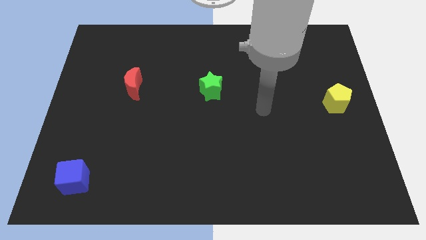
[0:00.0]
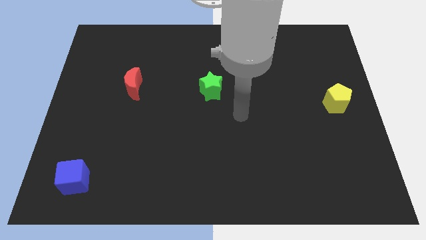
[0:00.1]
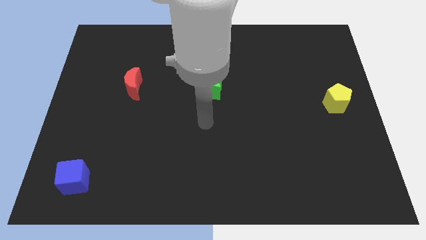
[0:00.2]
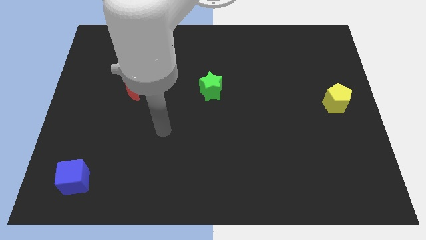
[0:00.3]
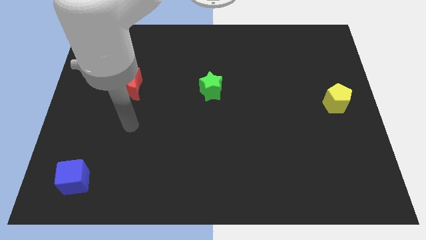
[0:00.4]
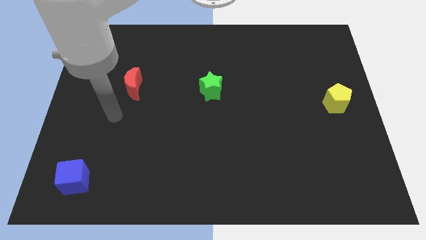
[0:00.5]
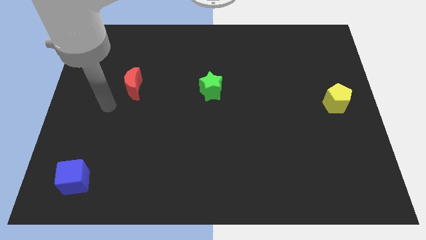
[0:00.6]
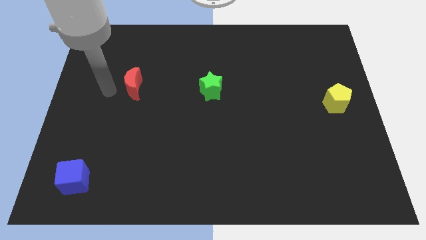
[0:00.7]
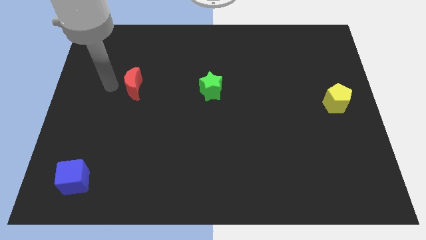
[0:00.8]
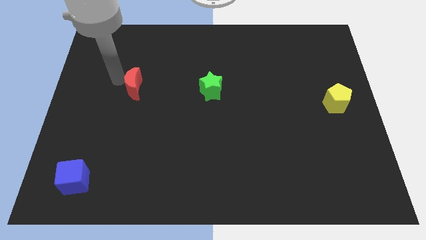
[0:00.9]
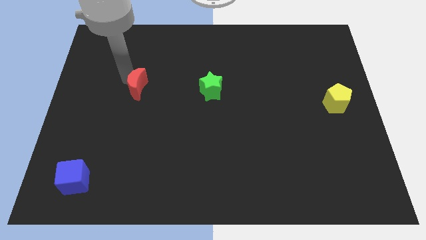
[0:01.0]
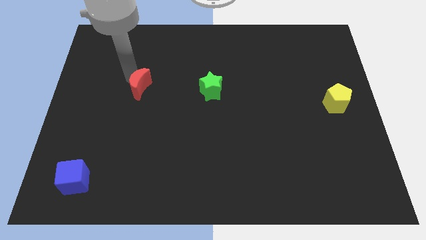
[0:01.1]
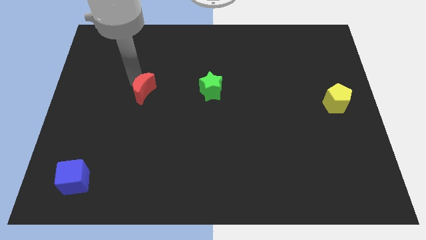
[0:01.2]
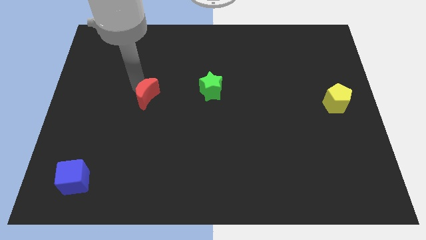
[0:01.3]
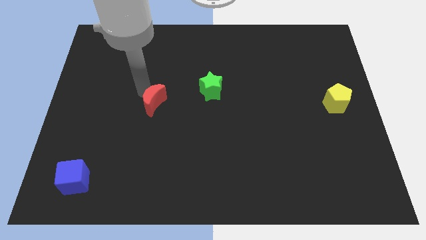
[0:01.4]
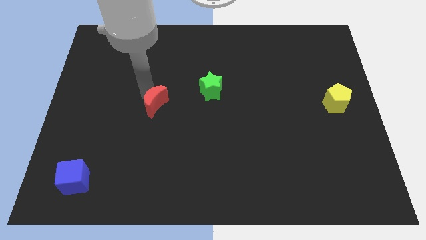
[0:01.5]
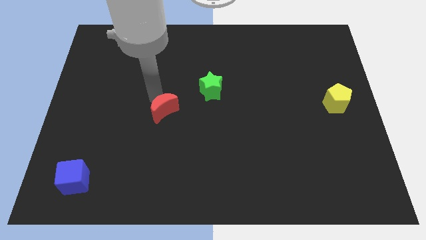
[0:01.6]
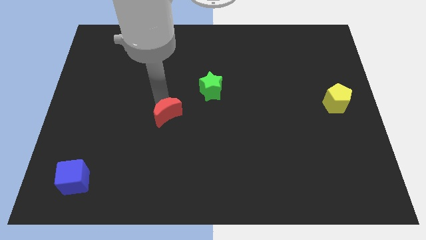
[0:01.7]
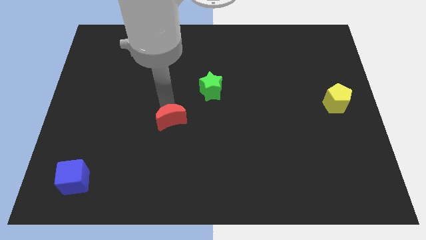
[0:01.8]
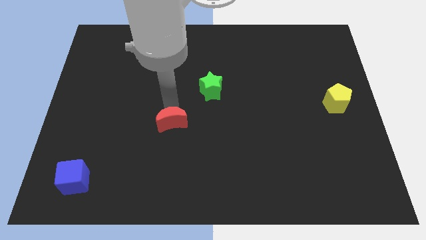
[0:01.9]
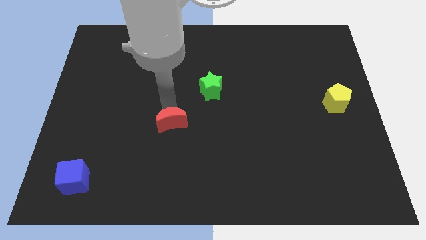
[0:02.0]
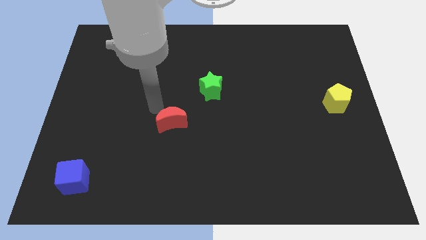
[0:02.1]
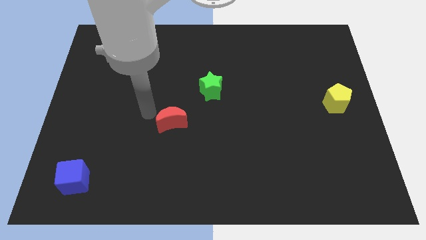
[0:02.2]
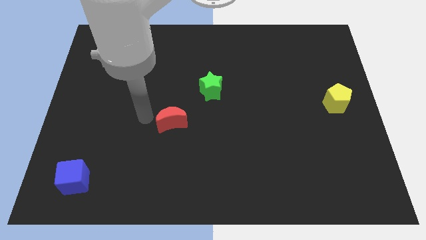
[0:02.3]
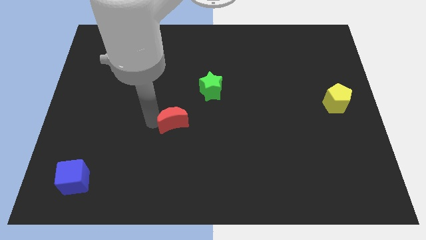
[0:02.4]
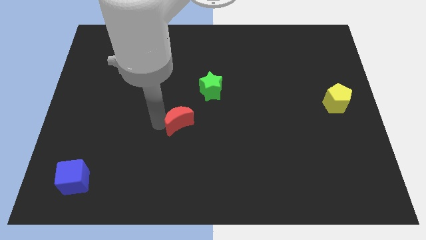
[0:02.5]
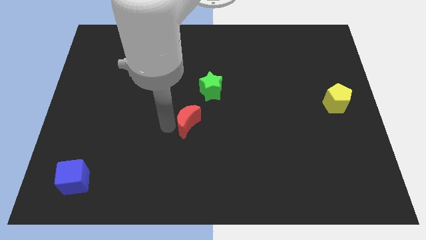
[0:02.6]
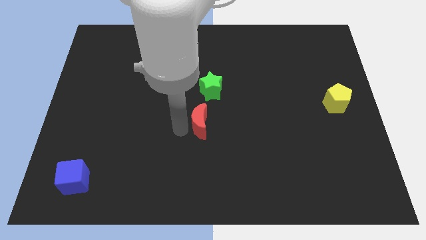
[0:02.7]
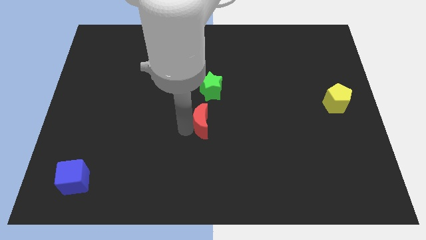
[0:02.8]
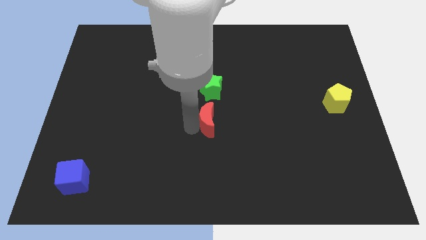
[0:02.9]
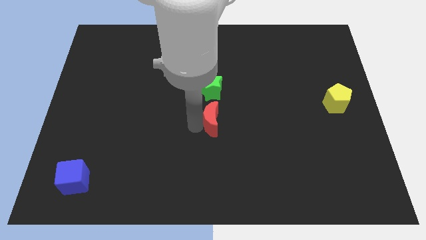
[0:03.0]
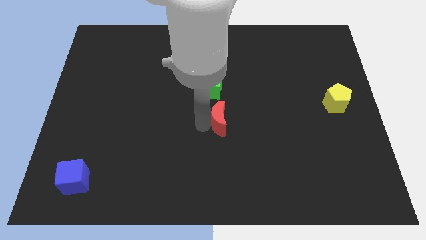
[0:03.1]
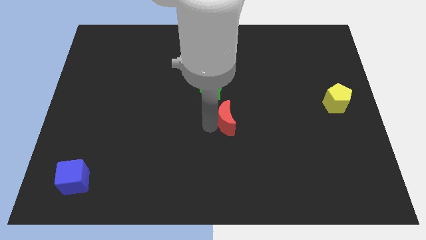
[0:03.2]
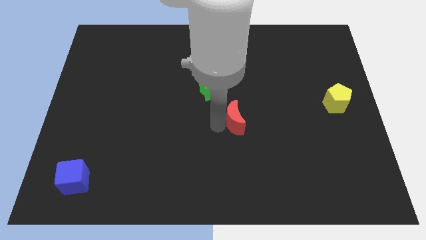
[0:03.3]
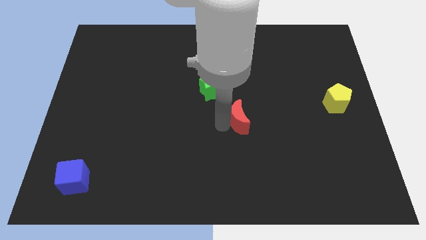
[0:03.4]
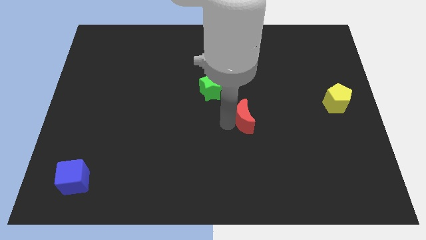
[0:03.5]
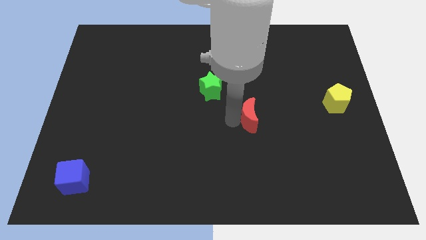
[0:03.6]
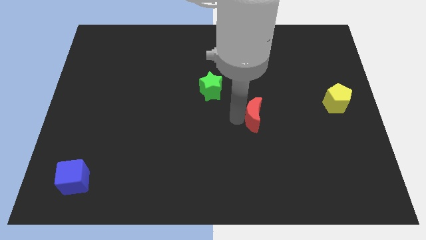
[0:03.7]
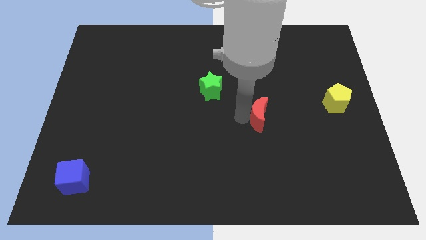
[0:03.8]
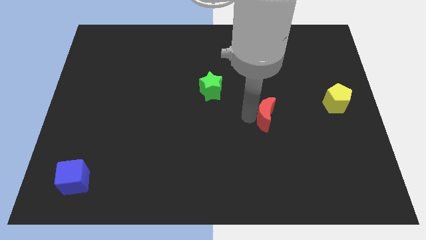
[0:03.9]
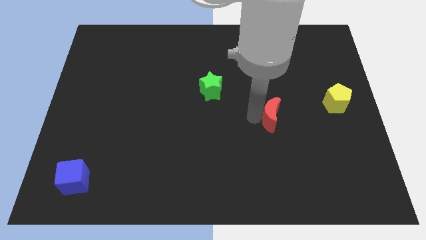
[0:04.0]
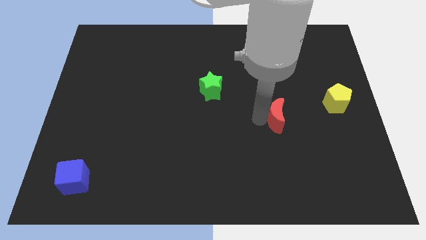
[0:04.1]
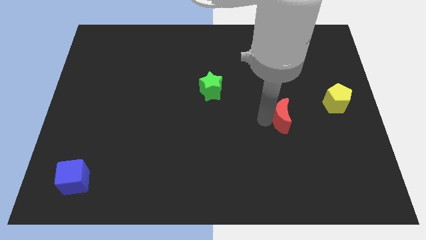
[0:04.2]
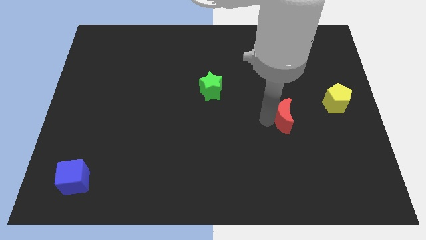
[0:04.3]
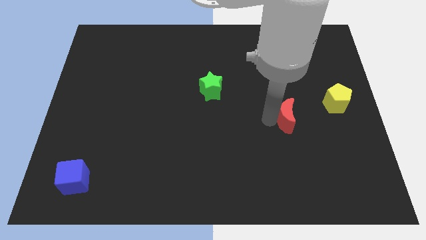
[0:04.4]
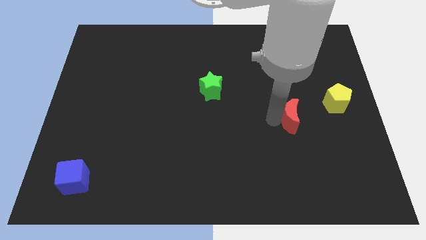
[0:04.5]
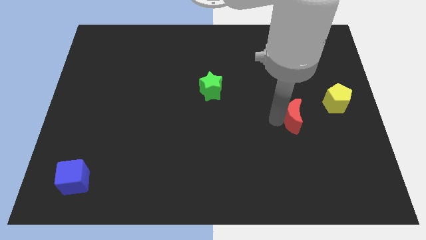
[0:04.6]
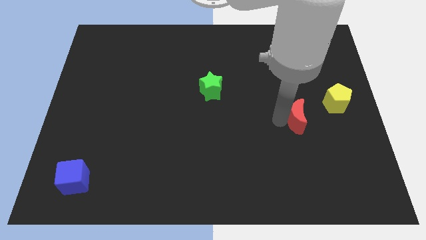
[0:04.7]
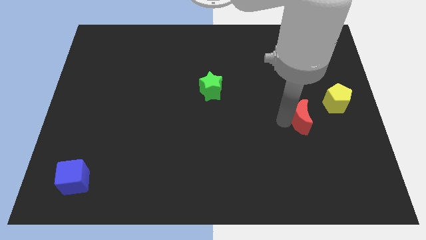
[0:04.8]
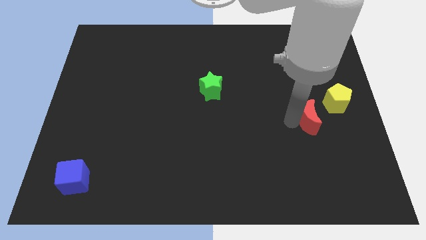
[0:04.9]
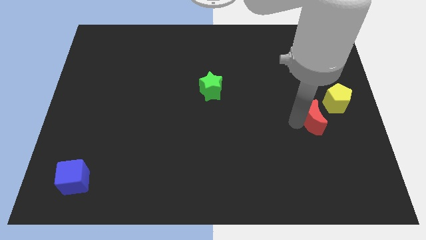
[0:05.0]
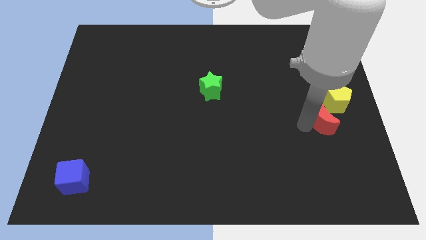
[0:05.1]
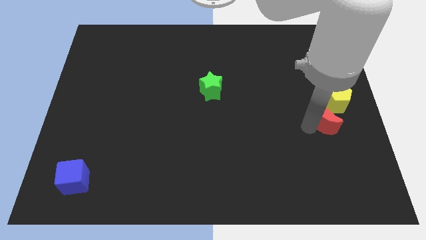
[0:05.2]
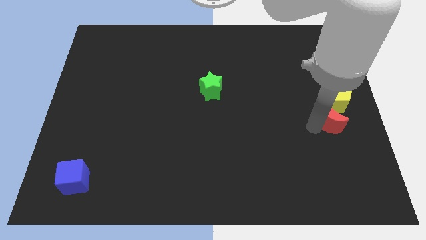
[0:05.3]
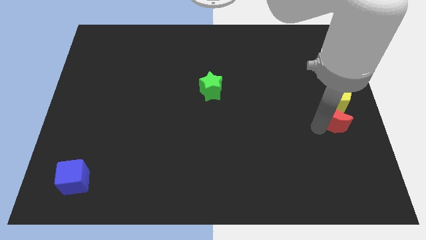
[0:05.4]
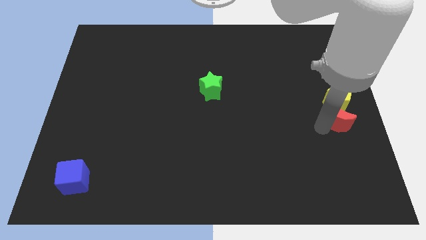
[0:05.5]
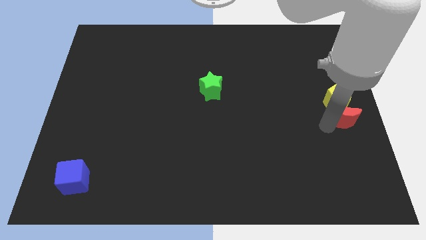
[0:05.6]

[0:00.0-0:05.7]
move the red moon towards the yellow block

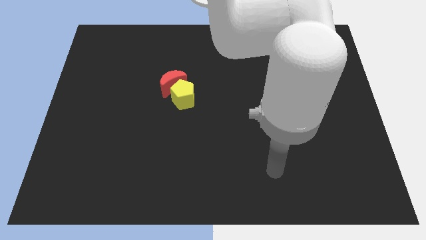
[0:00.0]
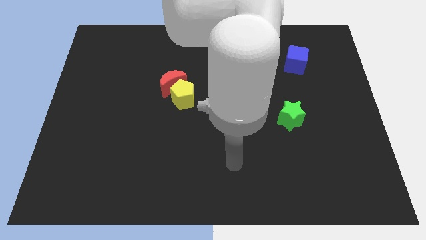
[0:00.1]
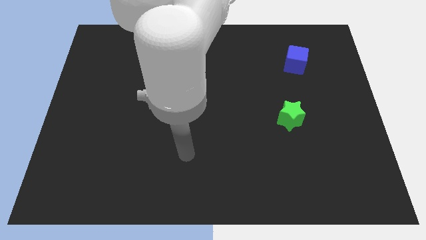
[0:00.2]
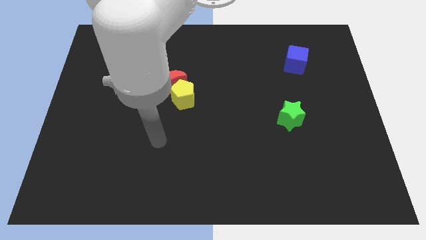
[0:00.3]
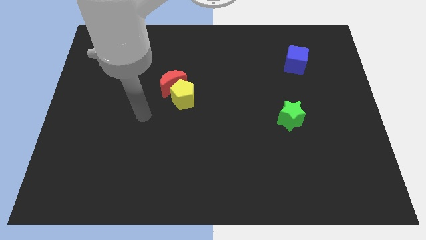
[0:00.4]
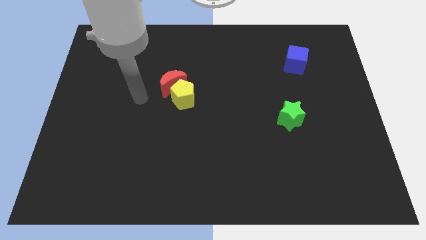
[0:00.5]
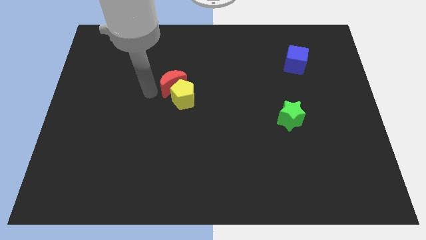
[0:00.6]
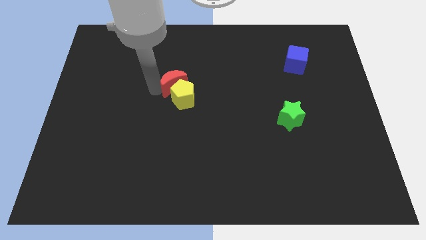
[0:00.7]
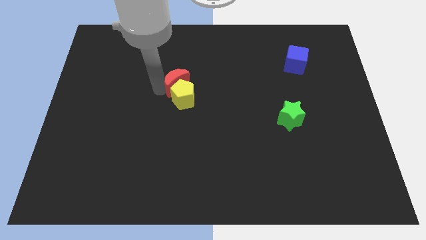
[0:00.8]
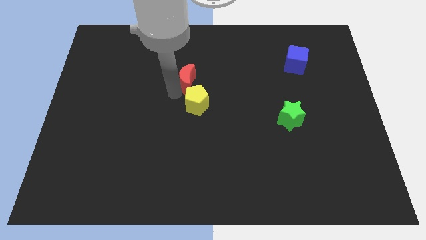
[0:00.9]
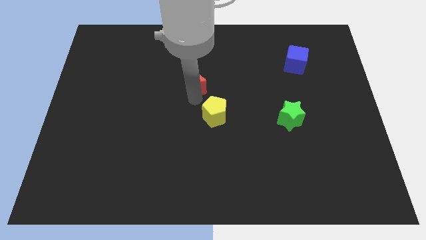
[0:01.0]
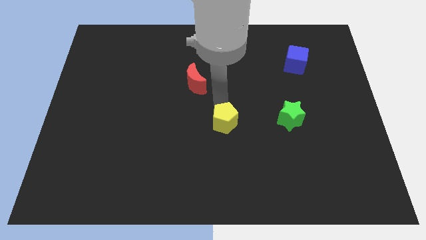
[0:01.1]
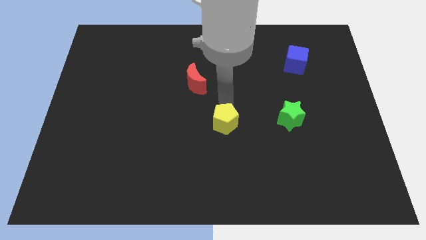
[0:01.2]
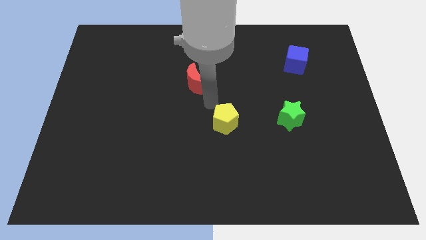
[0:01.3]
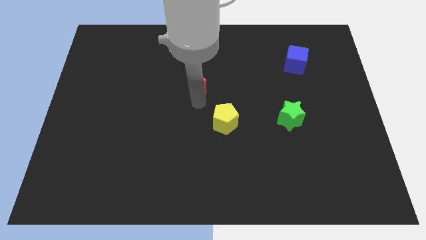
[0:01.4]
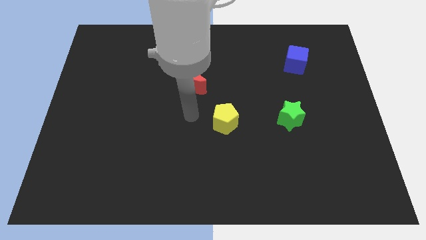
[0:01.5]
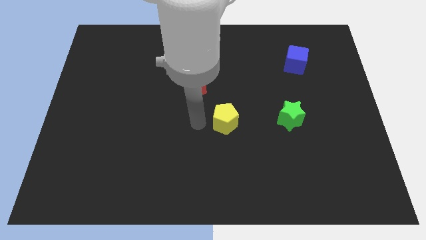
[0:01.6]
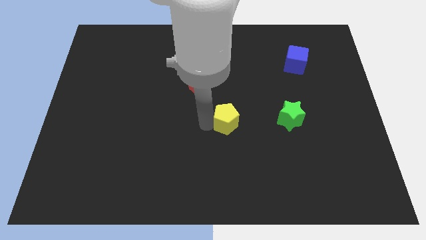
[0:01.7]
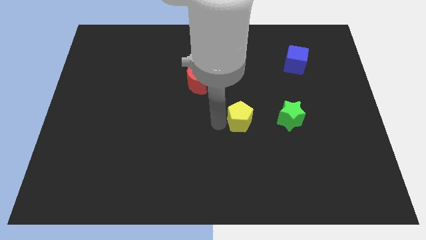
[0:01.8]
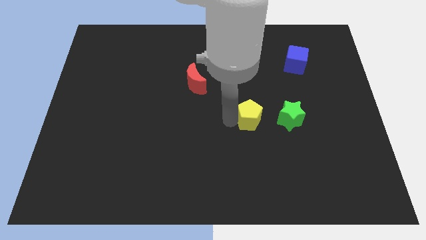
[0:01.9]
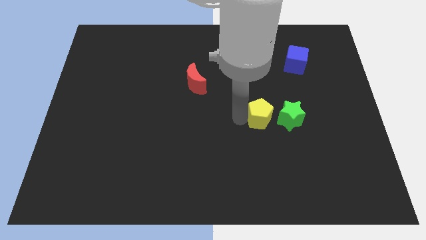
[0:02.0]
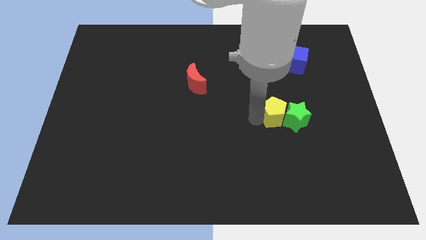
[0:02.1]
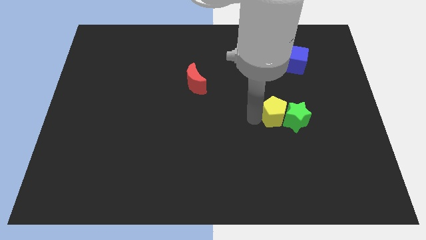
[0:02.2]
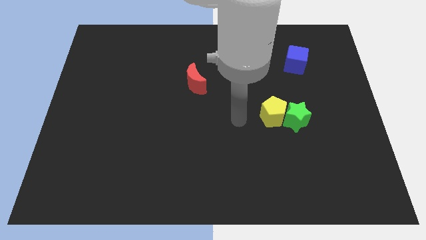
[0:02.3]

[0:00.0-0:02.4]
slide the yellow pentagon close to the star

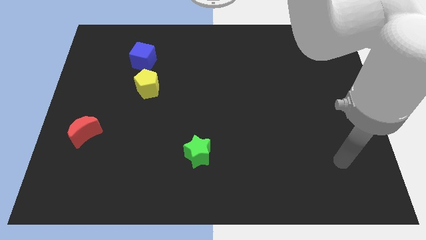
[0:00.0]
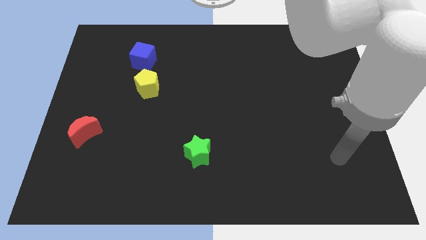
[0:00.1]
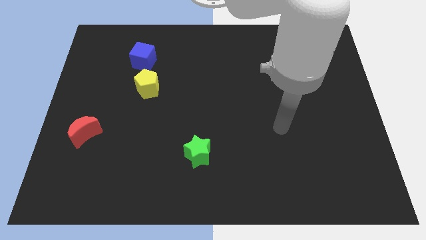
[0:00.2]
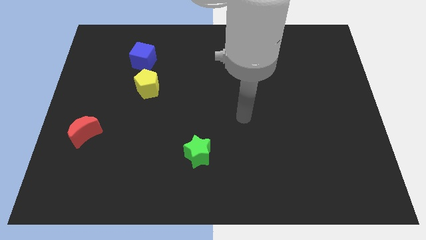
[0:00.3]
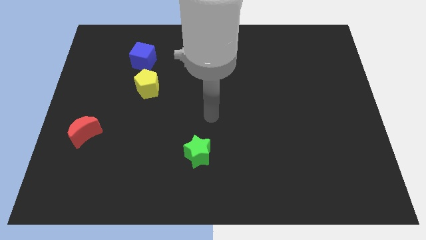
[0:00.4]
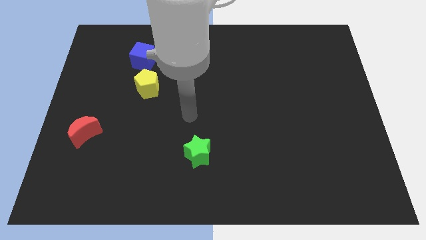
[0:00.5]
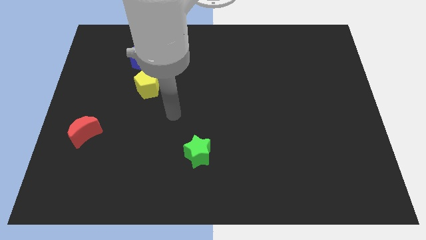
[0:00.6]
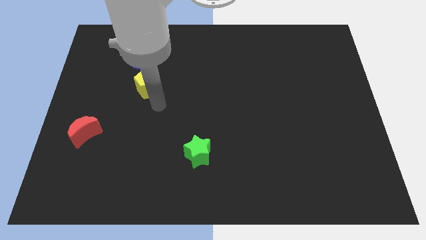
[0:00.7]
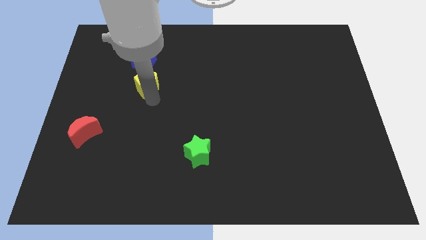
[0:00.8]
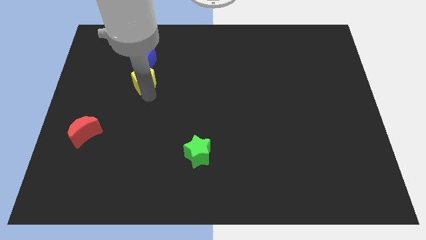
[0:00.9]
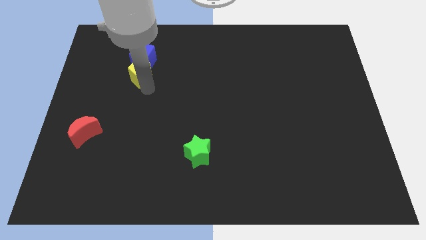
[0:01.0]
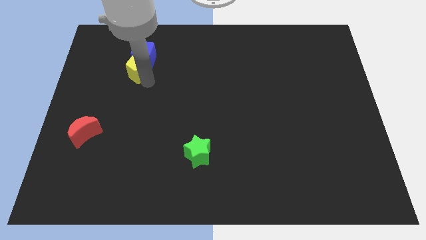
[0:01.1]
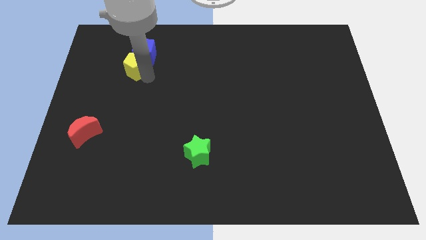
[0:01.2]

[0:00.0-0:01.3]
push the yellow block close to the blue cube
